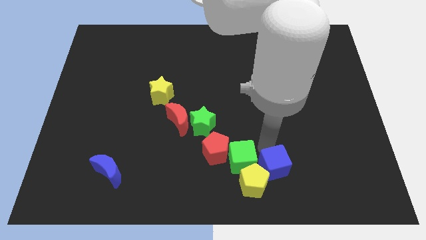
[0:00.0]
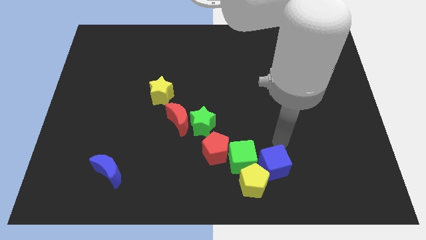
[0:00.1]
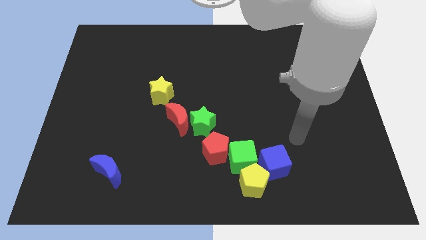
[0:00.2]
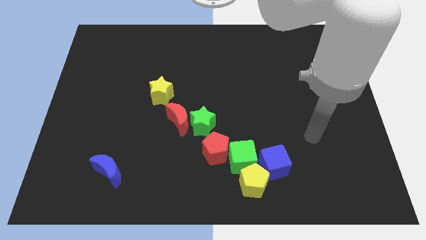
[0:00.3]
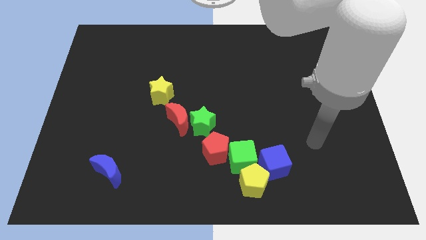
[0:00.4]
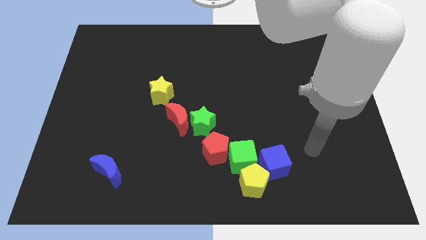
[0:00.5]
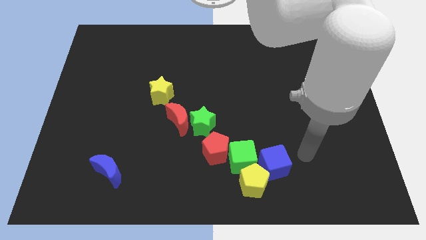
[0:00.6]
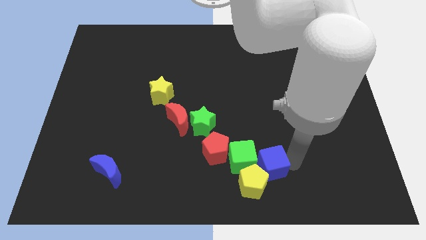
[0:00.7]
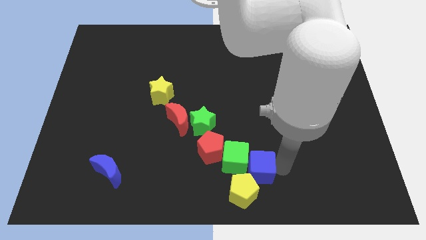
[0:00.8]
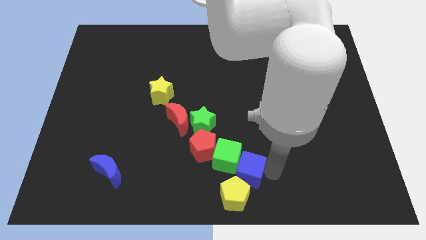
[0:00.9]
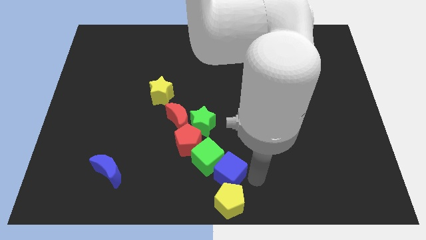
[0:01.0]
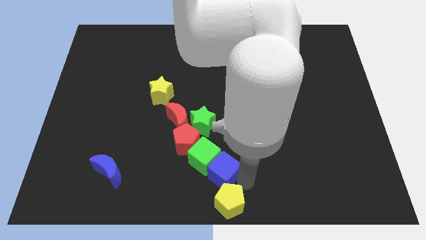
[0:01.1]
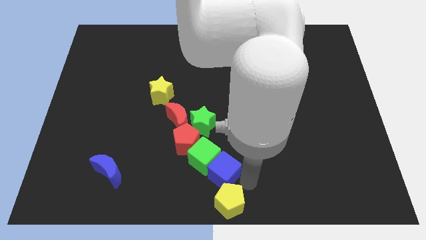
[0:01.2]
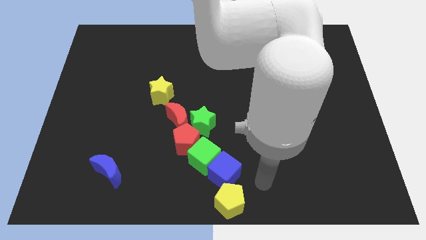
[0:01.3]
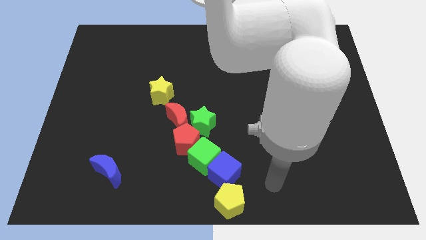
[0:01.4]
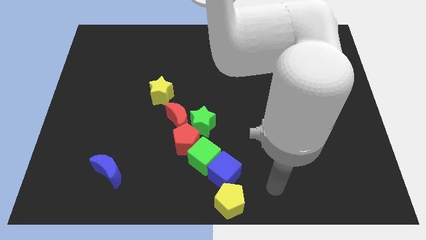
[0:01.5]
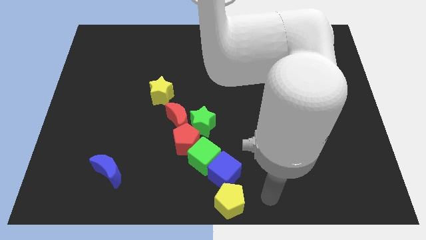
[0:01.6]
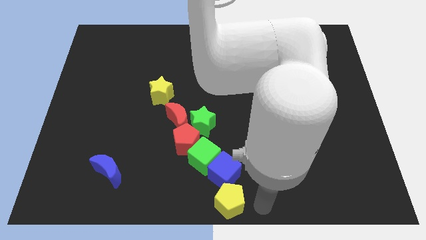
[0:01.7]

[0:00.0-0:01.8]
push the blue cube to the left of the board

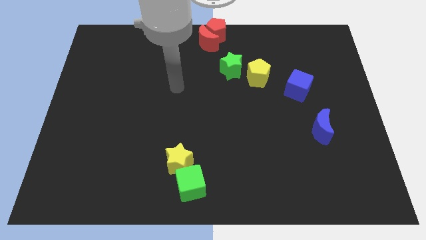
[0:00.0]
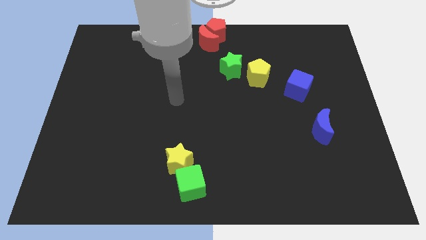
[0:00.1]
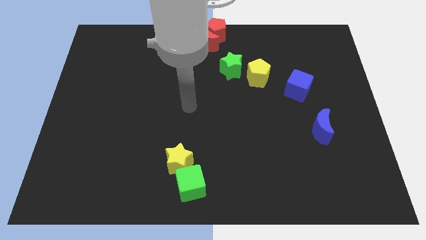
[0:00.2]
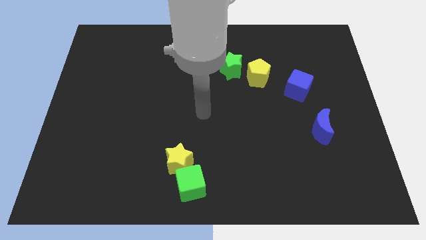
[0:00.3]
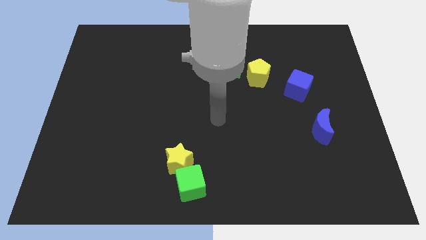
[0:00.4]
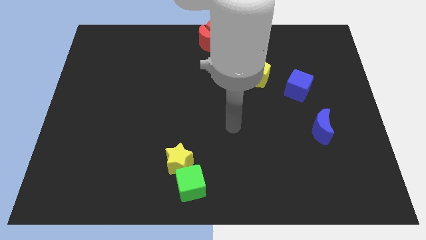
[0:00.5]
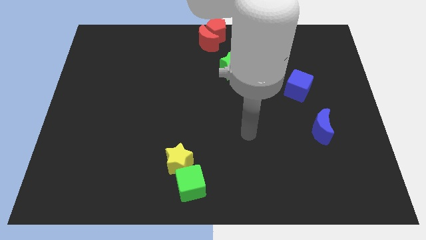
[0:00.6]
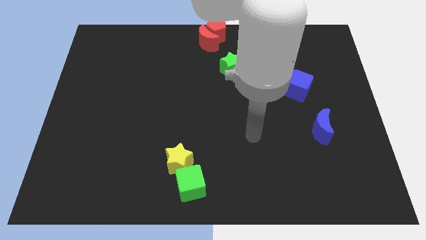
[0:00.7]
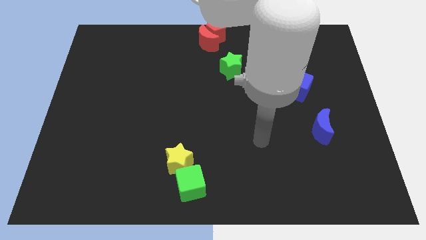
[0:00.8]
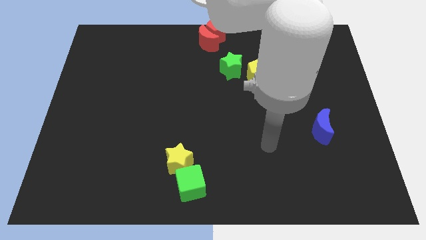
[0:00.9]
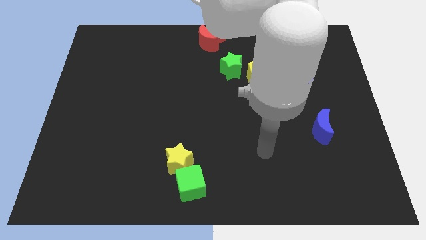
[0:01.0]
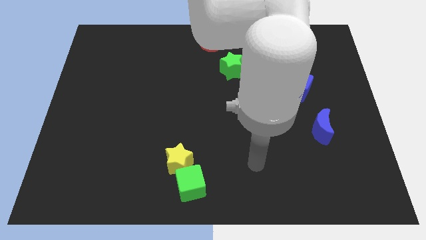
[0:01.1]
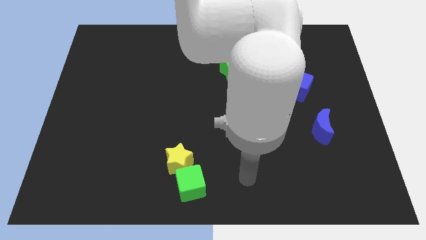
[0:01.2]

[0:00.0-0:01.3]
put your hand between the green cube and blue moon

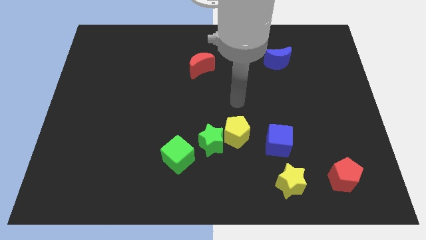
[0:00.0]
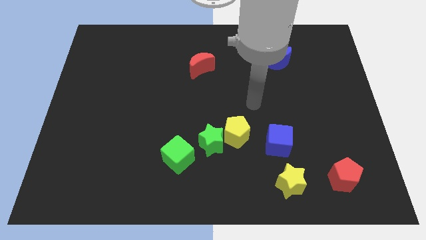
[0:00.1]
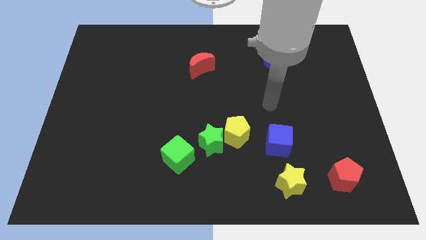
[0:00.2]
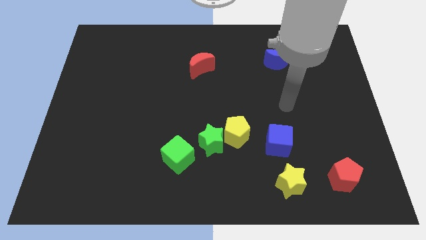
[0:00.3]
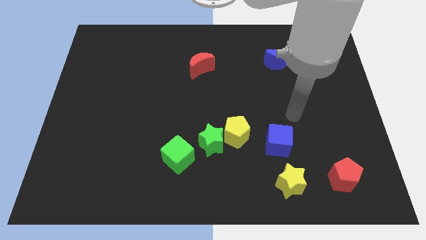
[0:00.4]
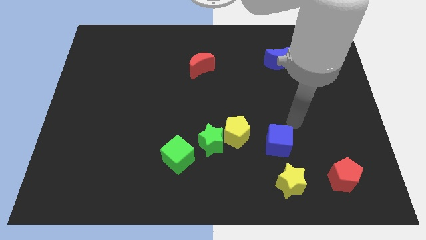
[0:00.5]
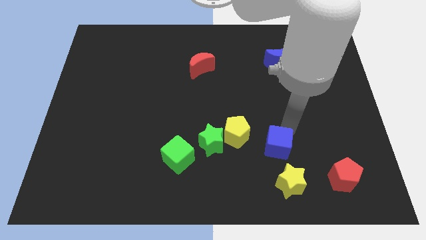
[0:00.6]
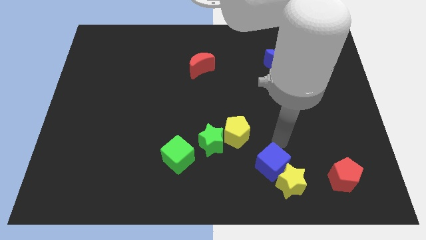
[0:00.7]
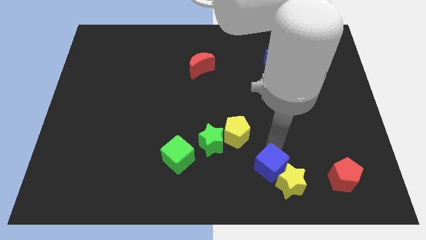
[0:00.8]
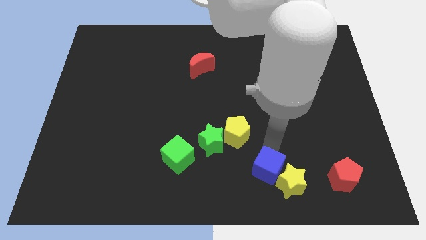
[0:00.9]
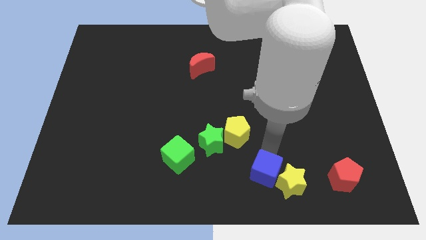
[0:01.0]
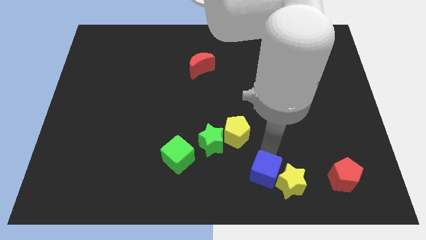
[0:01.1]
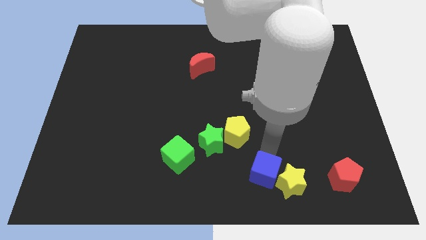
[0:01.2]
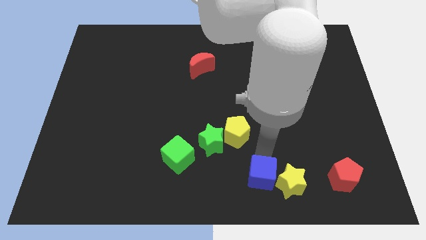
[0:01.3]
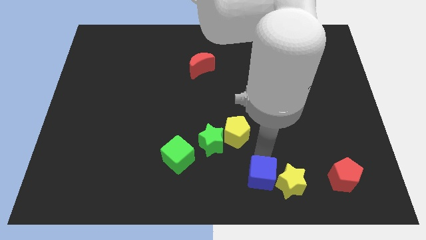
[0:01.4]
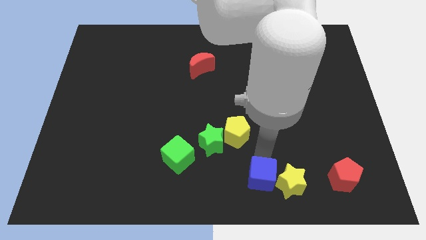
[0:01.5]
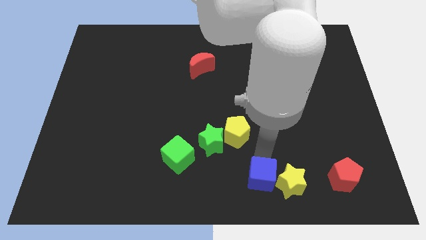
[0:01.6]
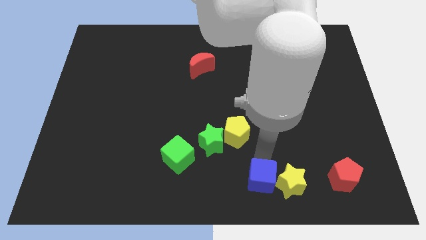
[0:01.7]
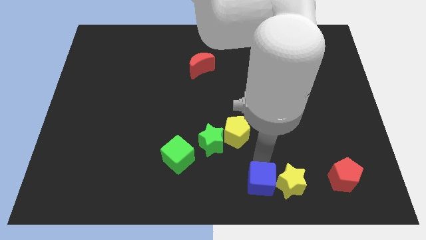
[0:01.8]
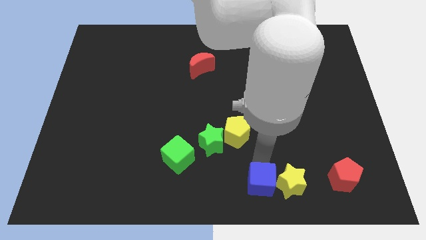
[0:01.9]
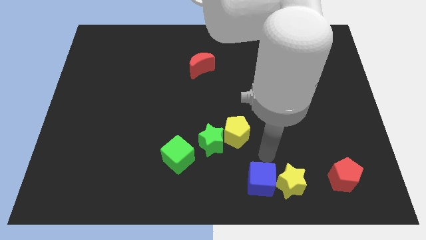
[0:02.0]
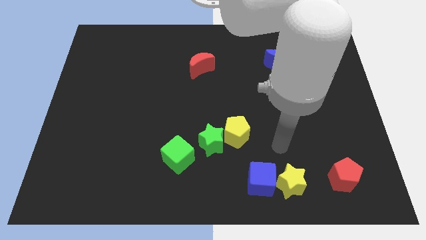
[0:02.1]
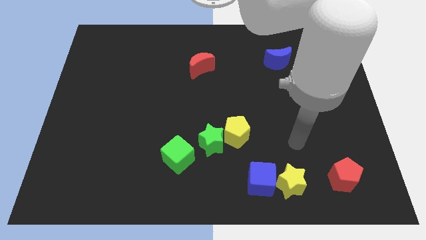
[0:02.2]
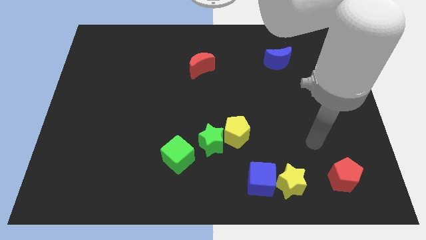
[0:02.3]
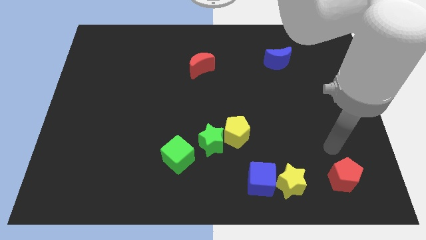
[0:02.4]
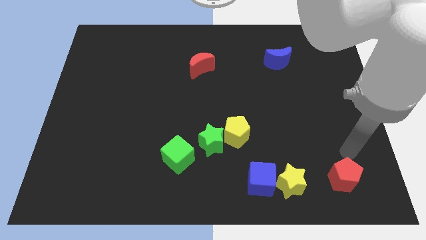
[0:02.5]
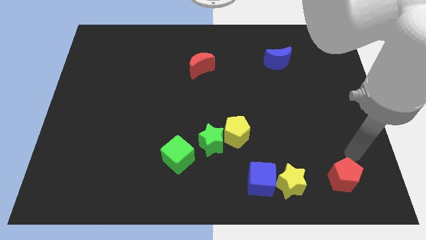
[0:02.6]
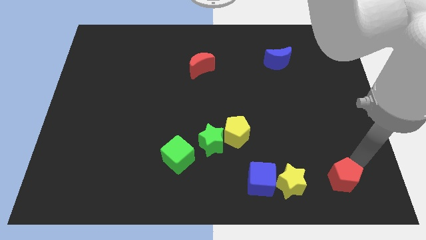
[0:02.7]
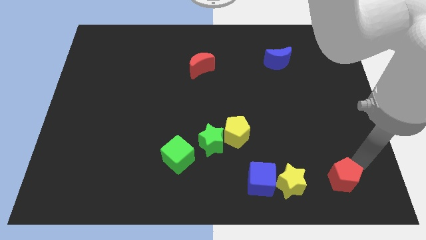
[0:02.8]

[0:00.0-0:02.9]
move the blue cube close to the yellow star

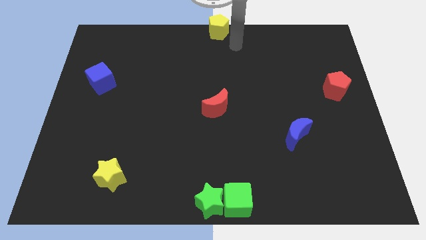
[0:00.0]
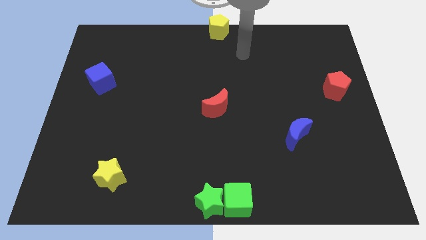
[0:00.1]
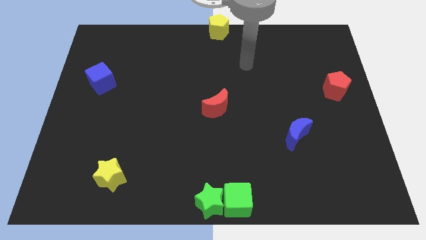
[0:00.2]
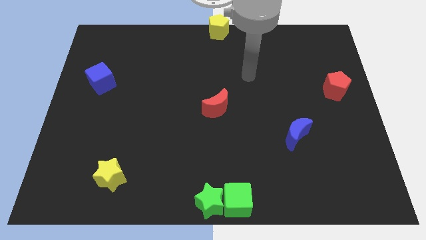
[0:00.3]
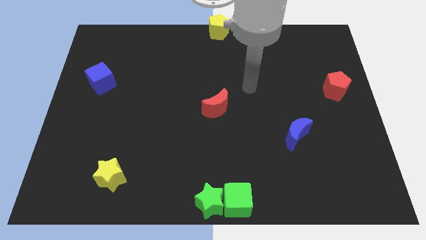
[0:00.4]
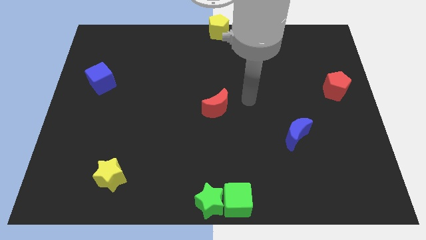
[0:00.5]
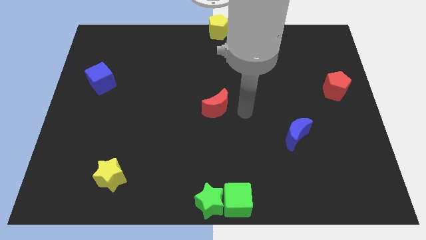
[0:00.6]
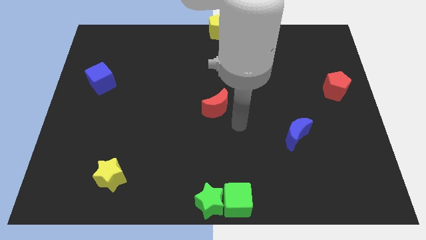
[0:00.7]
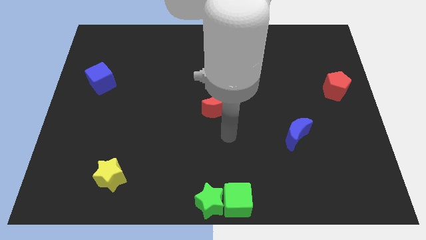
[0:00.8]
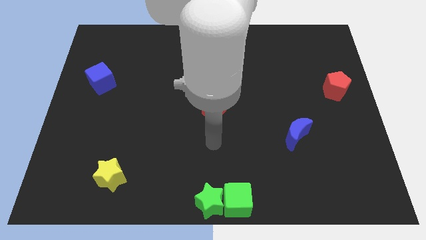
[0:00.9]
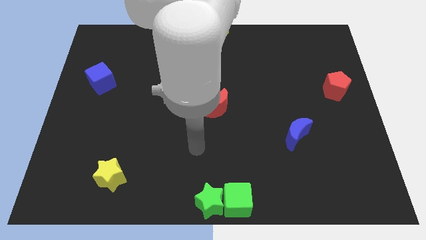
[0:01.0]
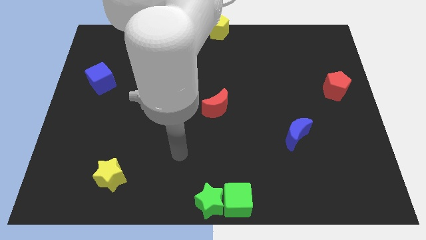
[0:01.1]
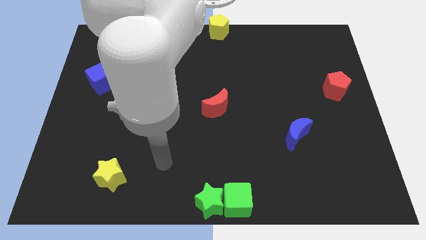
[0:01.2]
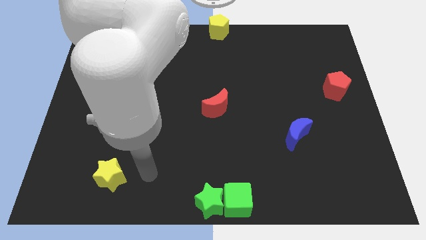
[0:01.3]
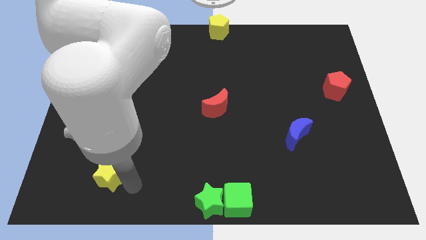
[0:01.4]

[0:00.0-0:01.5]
move your arm to the right of the yellow star

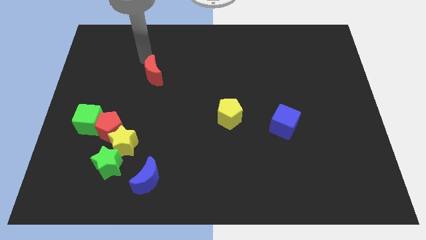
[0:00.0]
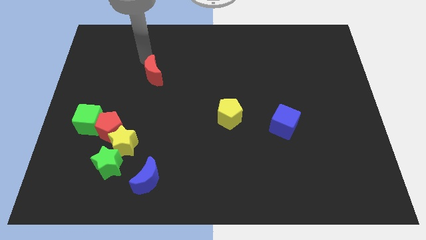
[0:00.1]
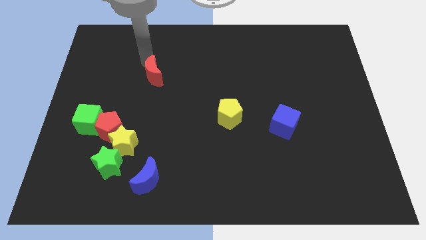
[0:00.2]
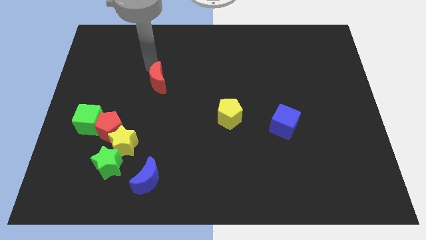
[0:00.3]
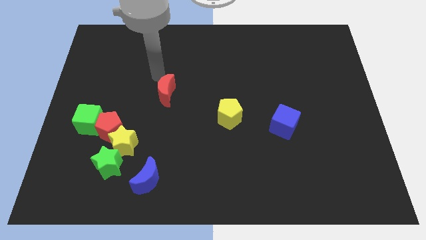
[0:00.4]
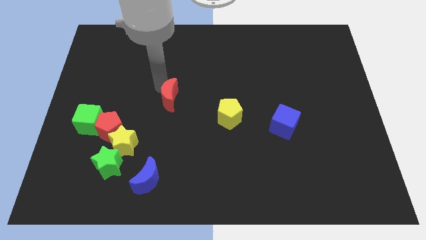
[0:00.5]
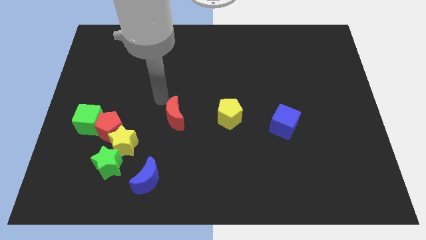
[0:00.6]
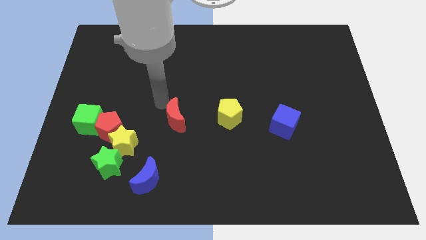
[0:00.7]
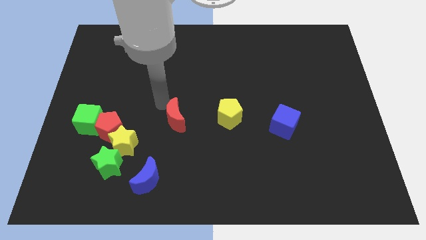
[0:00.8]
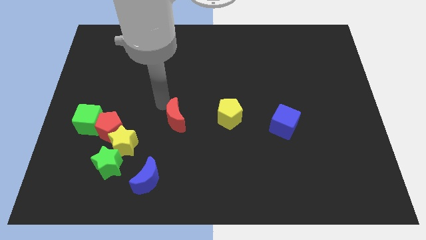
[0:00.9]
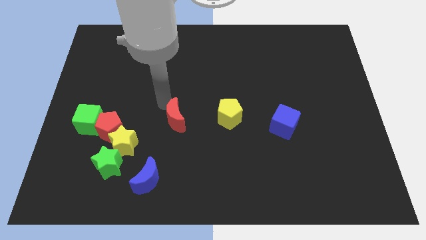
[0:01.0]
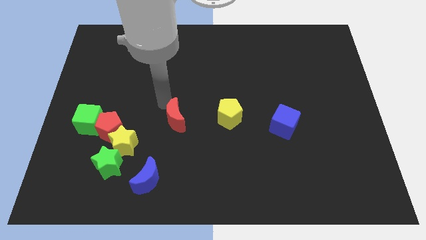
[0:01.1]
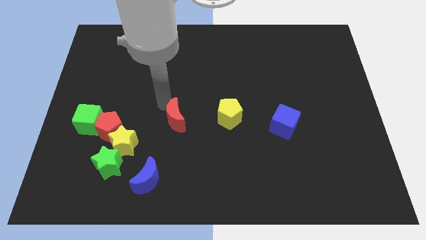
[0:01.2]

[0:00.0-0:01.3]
put the red crescent and yellow pentagon in a horizontal line
